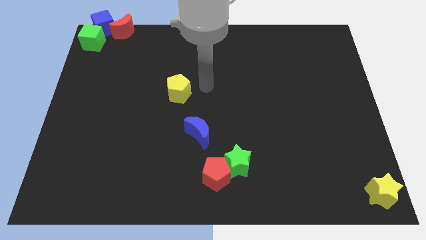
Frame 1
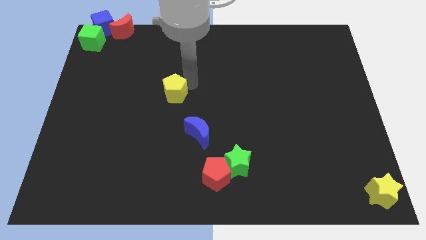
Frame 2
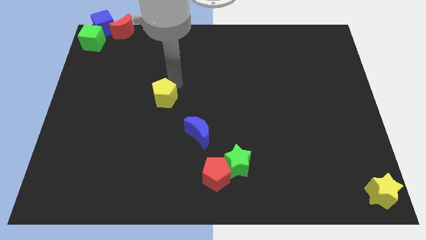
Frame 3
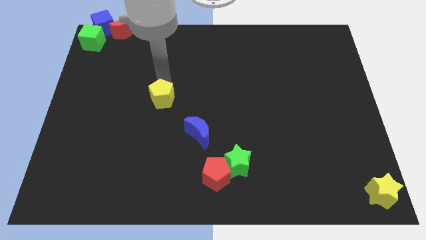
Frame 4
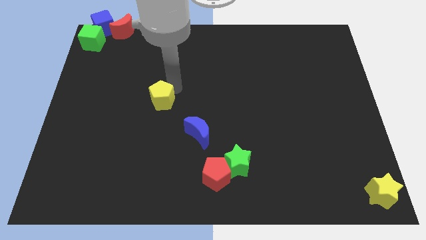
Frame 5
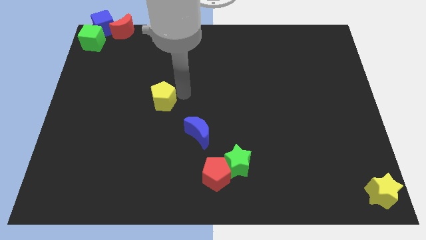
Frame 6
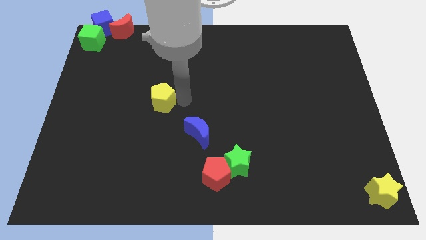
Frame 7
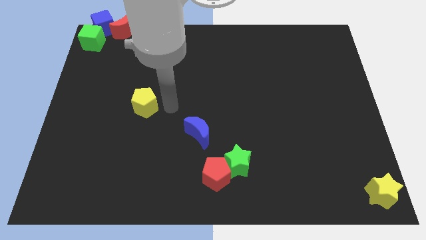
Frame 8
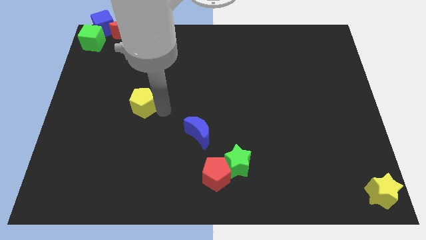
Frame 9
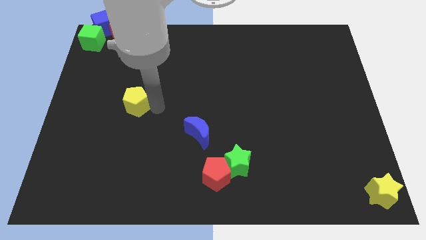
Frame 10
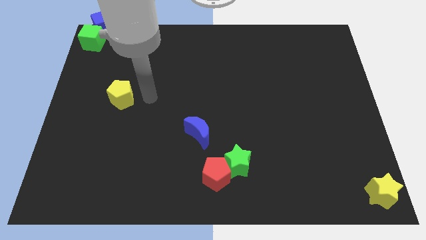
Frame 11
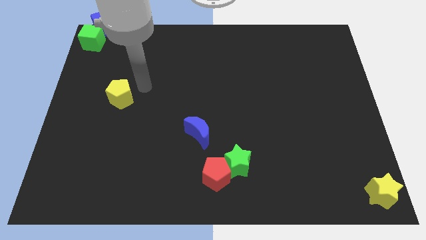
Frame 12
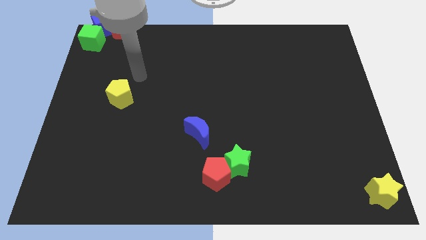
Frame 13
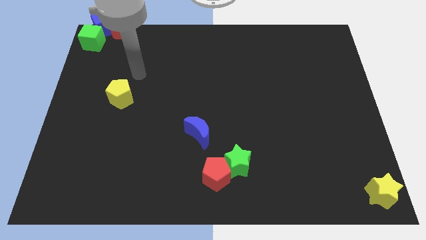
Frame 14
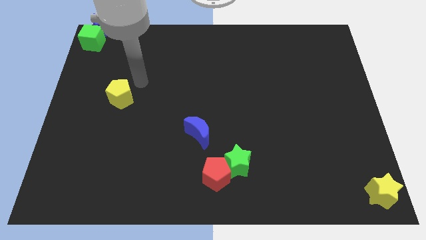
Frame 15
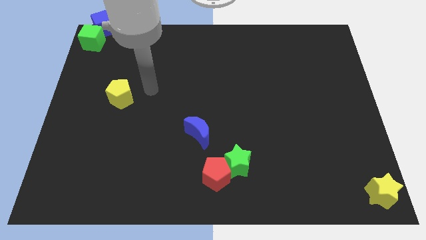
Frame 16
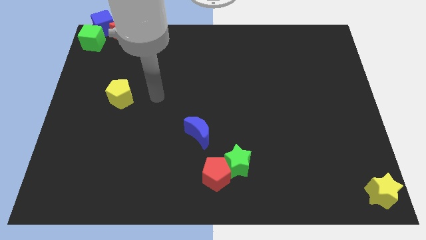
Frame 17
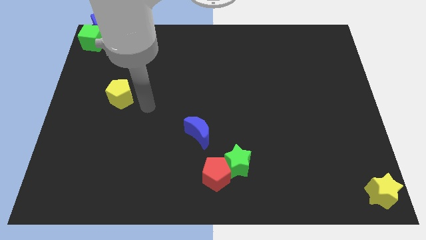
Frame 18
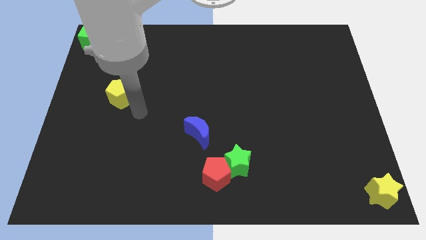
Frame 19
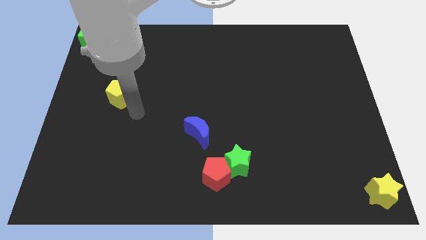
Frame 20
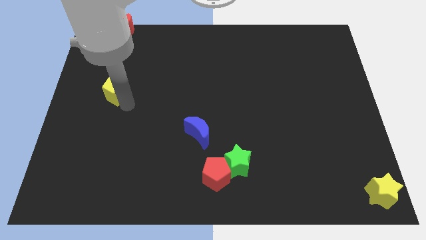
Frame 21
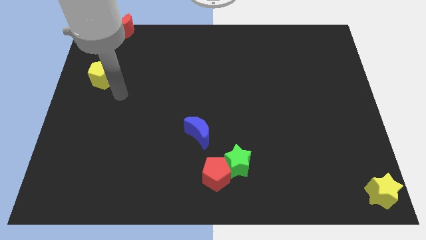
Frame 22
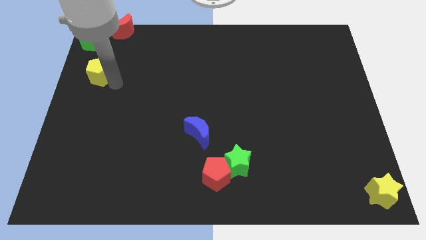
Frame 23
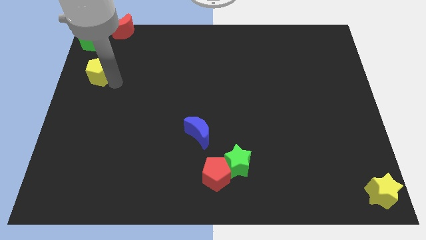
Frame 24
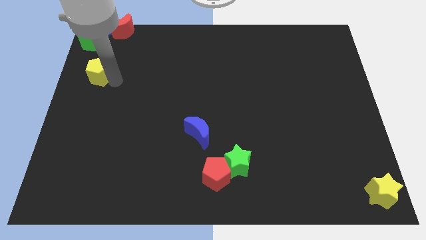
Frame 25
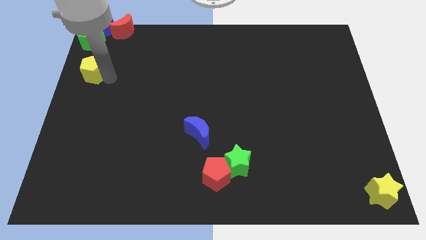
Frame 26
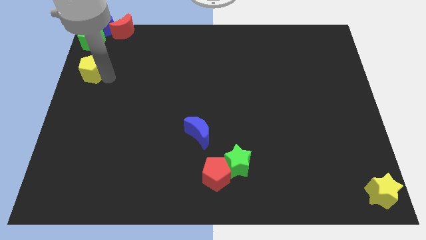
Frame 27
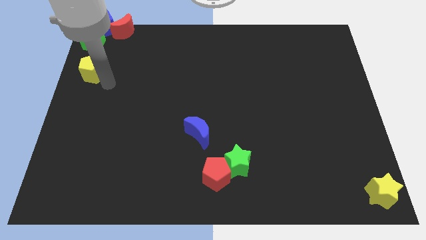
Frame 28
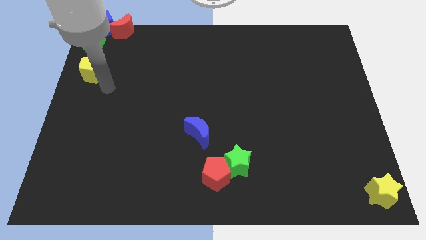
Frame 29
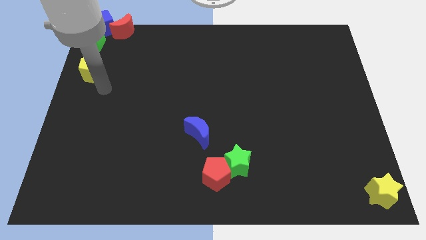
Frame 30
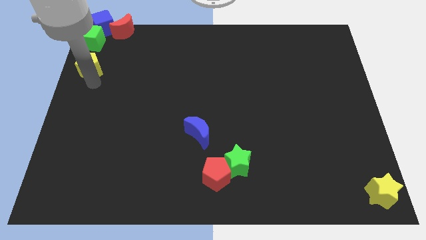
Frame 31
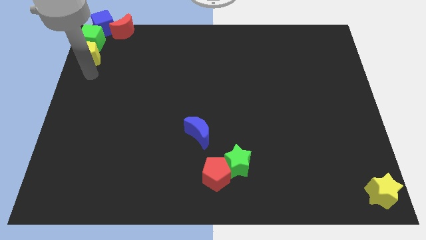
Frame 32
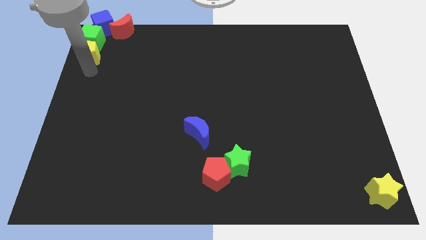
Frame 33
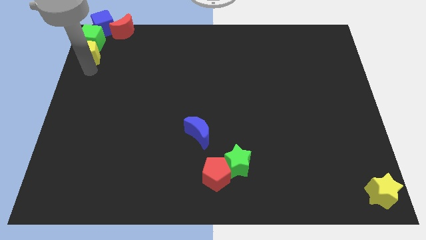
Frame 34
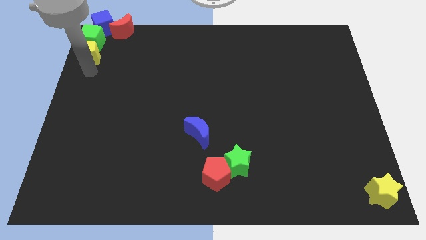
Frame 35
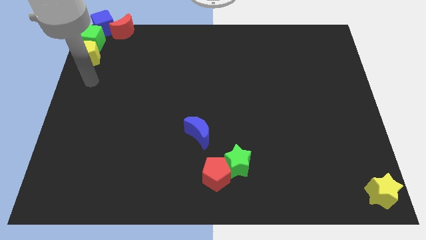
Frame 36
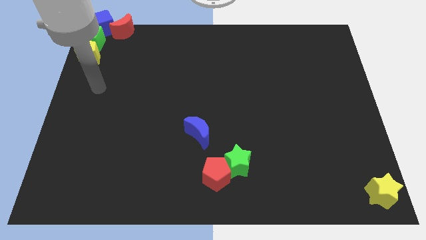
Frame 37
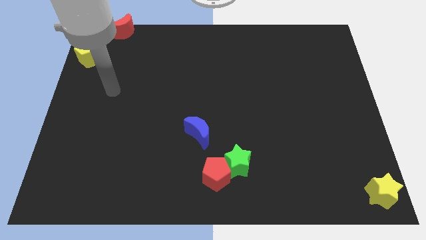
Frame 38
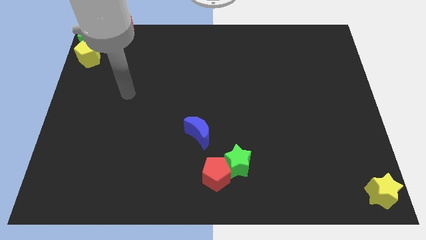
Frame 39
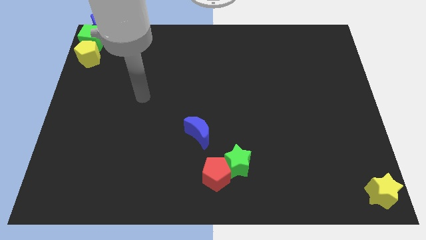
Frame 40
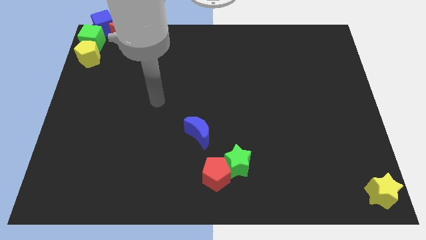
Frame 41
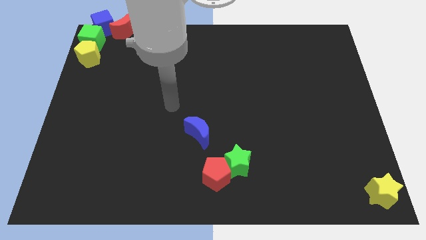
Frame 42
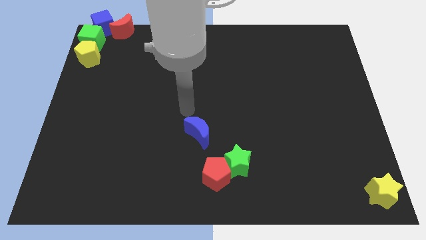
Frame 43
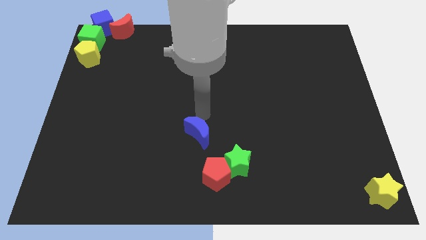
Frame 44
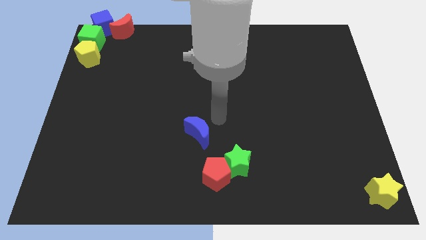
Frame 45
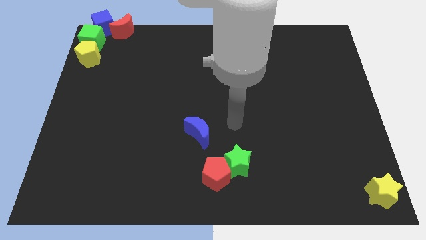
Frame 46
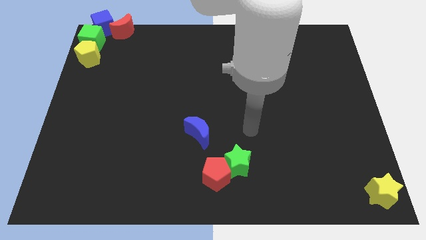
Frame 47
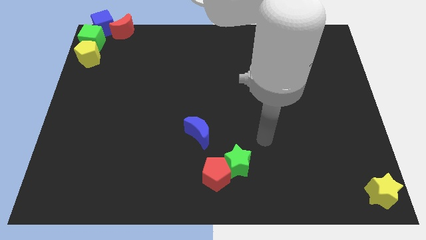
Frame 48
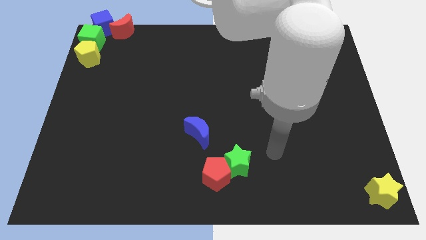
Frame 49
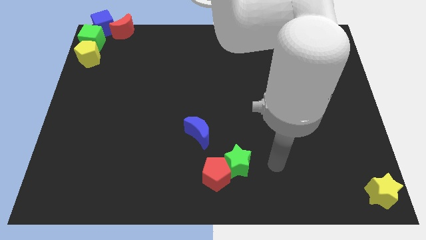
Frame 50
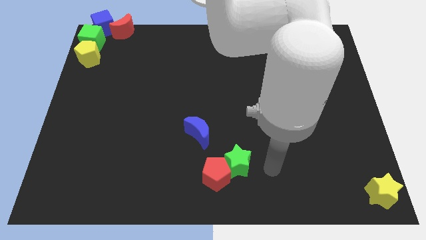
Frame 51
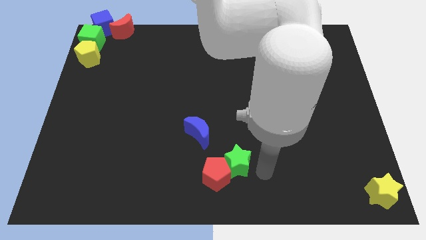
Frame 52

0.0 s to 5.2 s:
place the yellow pentagon bottom to the green cube

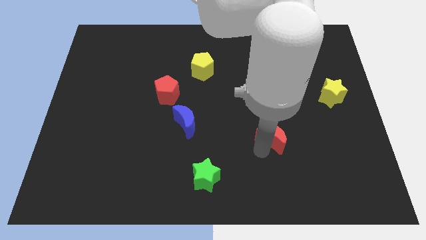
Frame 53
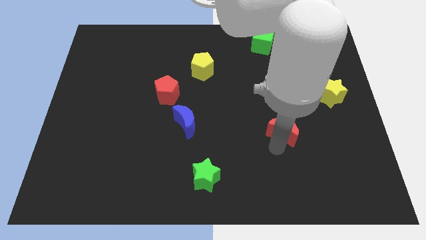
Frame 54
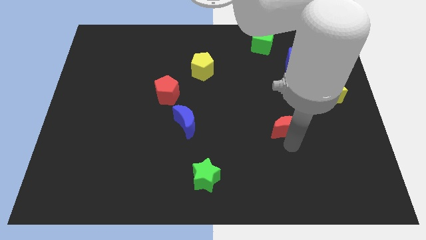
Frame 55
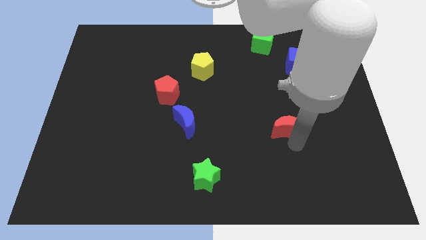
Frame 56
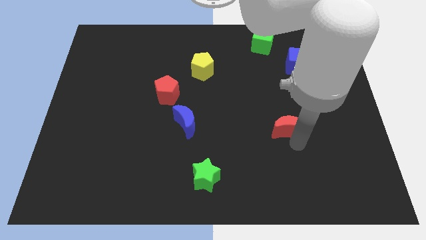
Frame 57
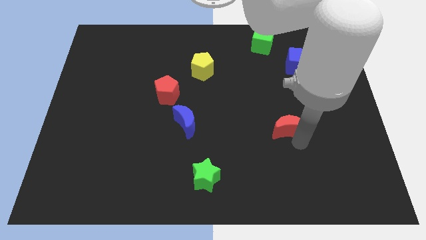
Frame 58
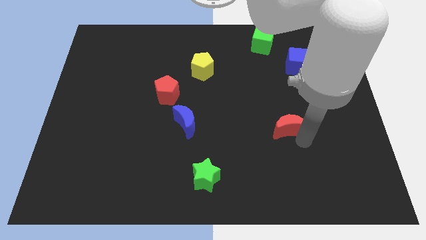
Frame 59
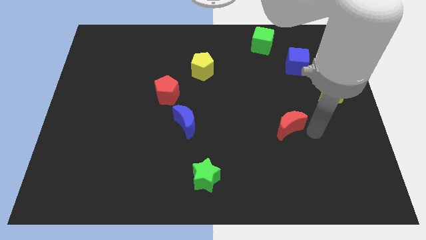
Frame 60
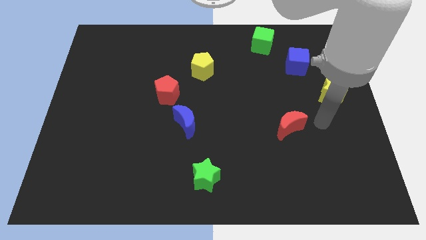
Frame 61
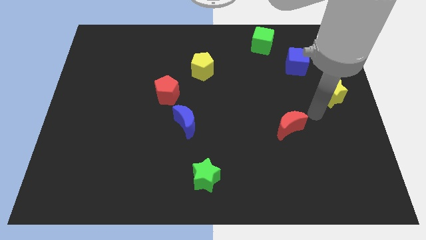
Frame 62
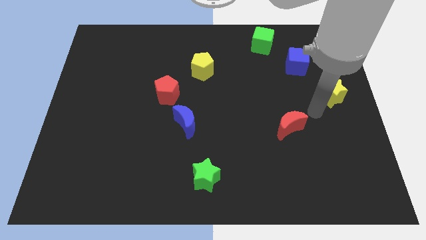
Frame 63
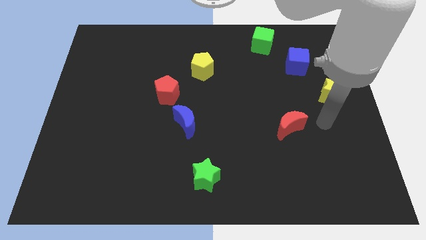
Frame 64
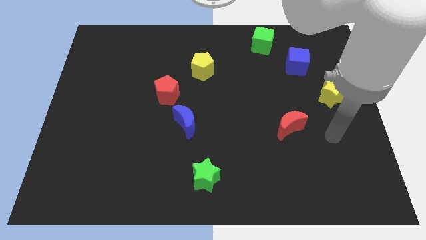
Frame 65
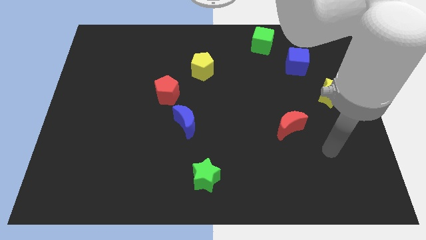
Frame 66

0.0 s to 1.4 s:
slightly push the red moon diagonal to the bottom left of the yellow star

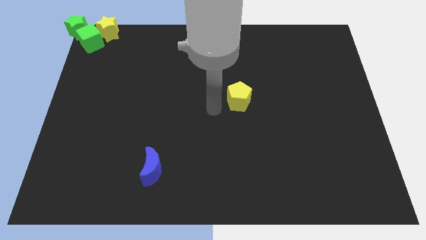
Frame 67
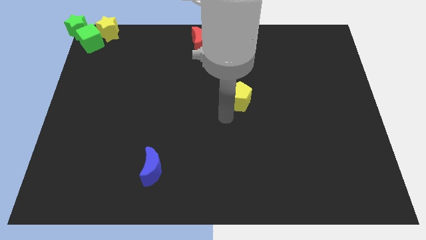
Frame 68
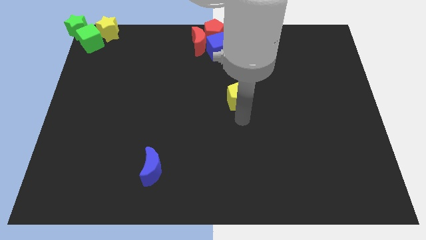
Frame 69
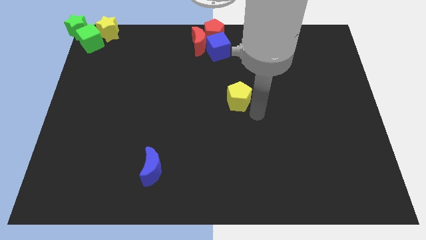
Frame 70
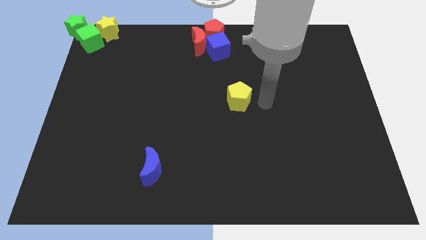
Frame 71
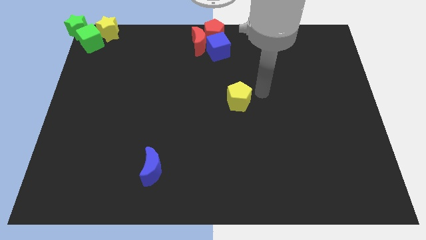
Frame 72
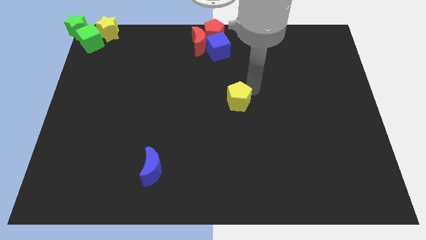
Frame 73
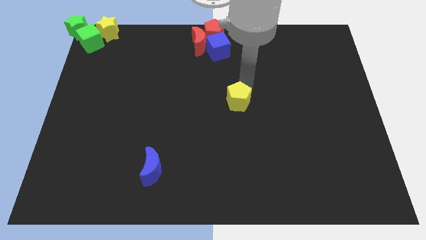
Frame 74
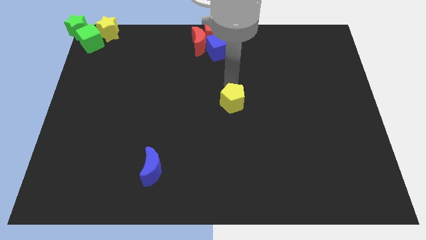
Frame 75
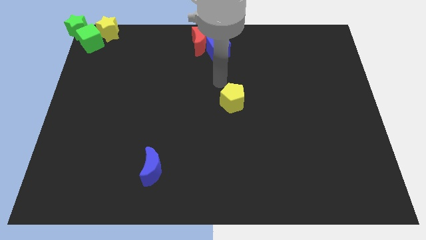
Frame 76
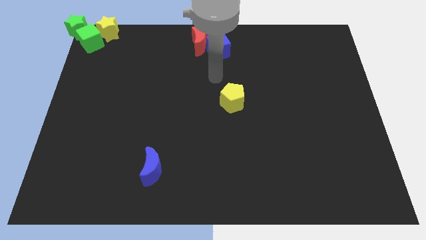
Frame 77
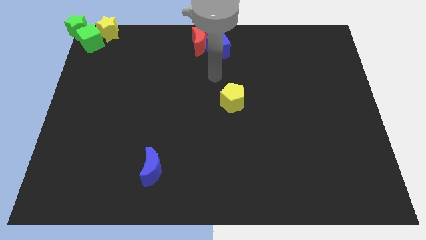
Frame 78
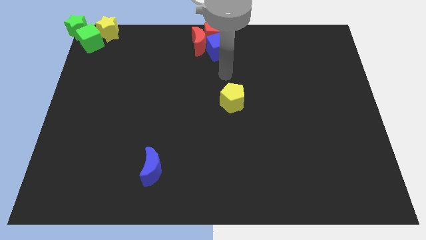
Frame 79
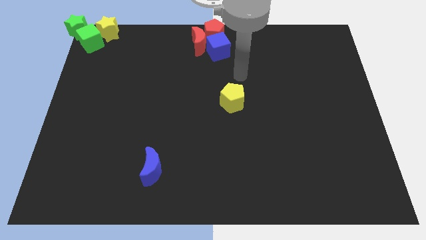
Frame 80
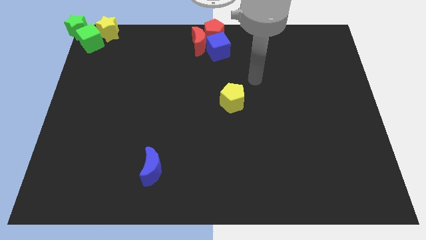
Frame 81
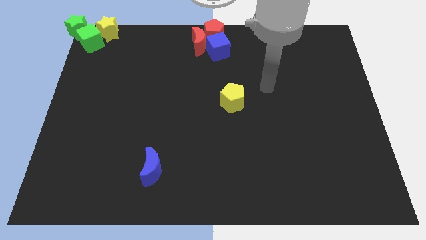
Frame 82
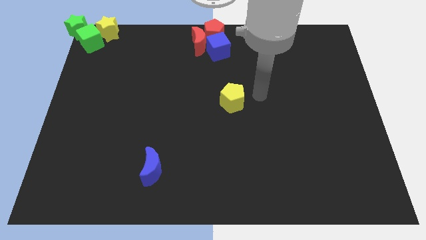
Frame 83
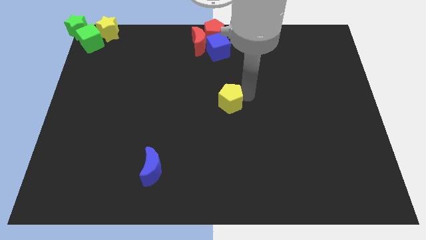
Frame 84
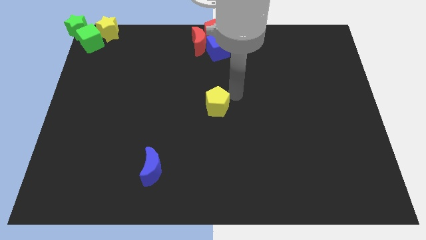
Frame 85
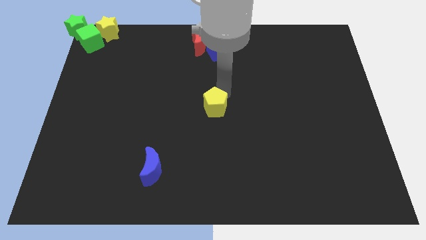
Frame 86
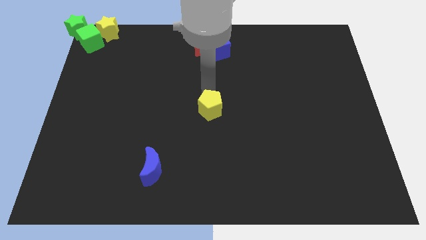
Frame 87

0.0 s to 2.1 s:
place the yellow pentagon at the center of the board
